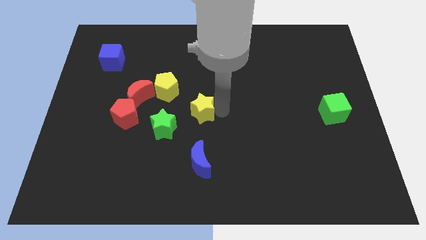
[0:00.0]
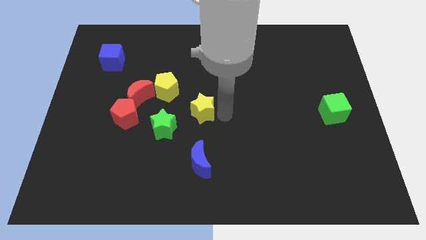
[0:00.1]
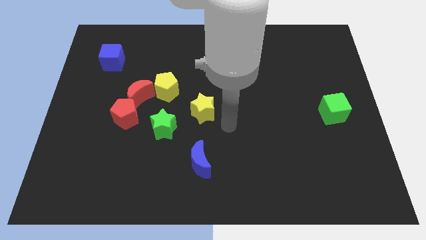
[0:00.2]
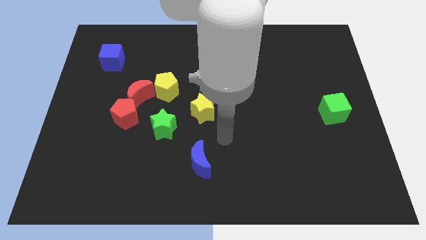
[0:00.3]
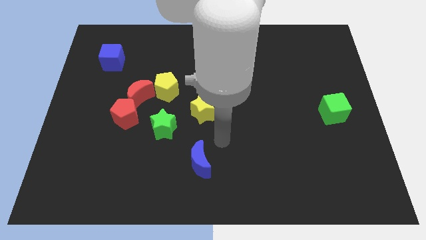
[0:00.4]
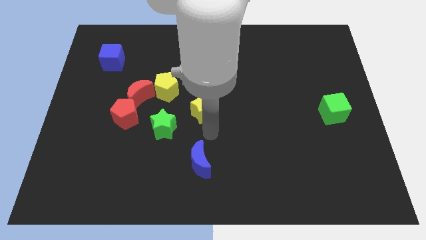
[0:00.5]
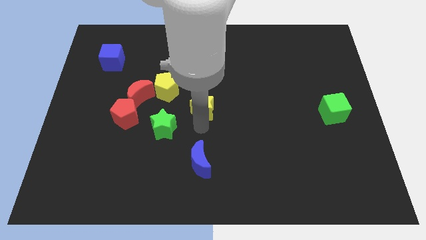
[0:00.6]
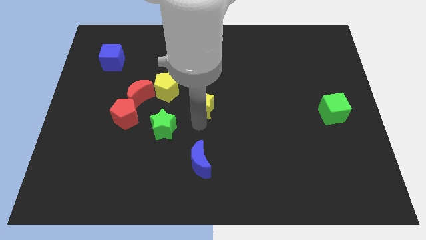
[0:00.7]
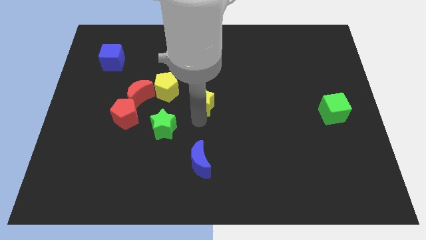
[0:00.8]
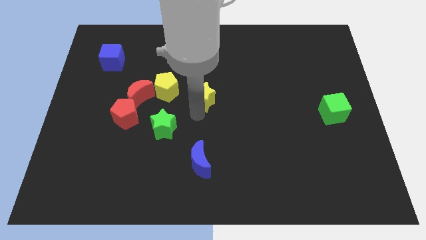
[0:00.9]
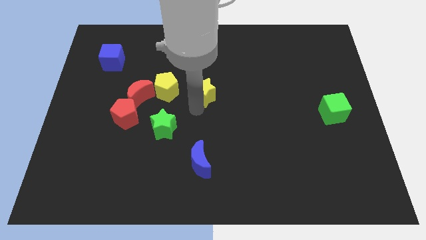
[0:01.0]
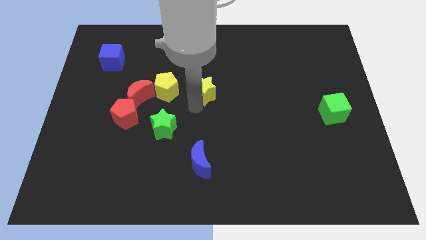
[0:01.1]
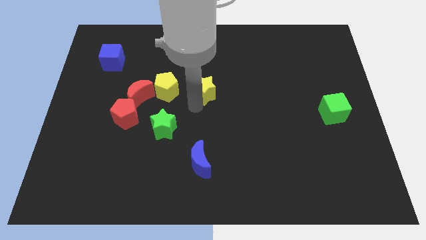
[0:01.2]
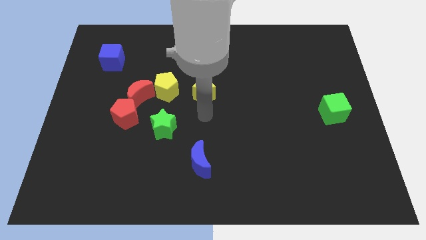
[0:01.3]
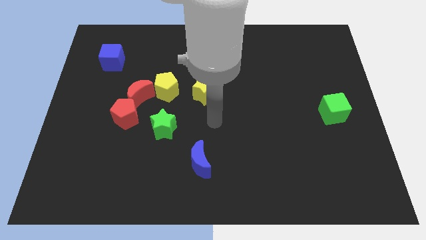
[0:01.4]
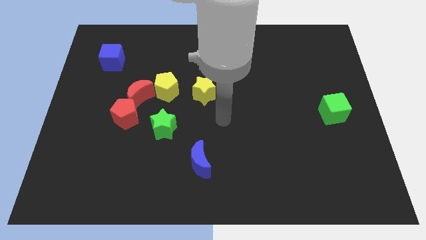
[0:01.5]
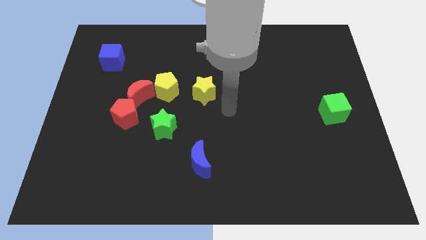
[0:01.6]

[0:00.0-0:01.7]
place the yellow star to the right side of yellow pentagon

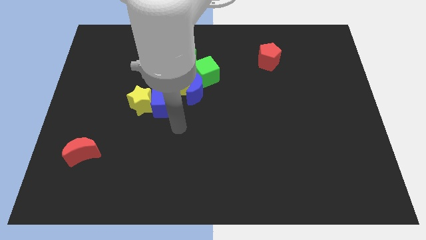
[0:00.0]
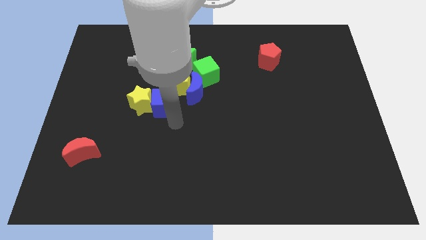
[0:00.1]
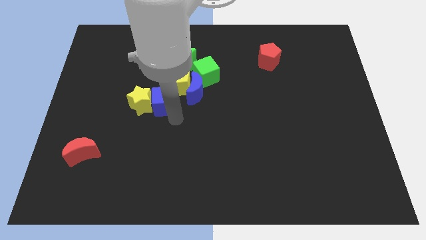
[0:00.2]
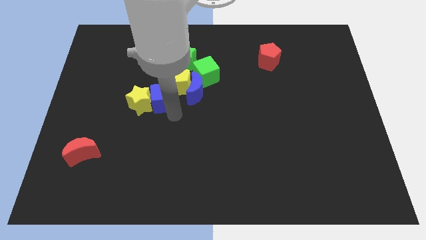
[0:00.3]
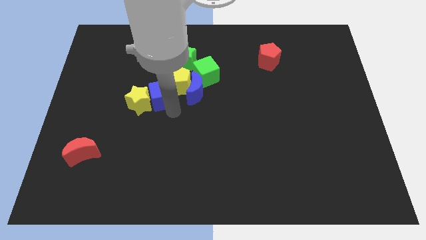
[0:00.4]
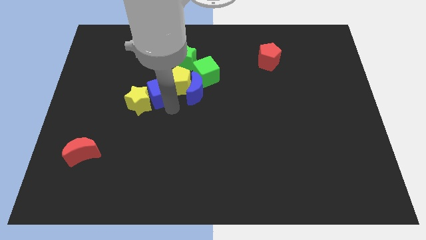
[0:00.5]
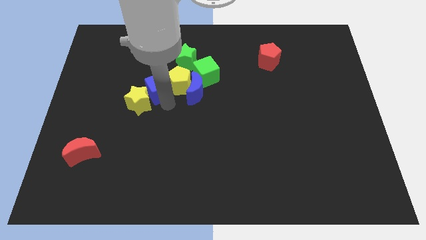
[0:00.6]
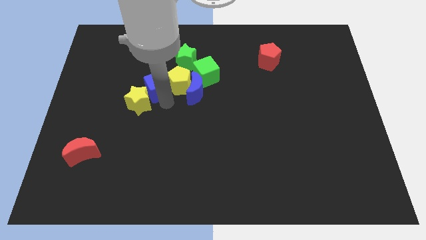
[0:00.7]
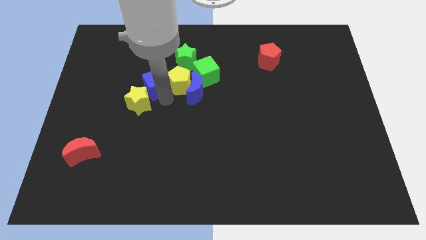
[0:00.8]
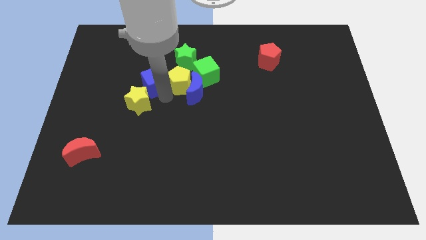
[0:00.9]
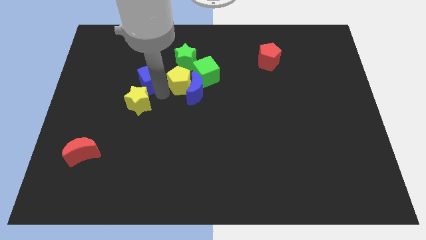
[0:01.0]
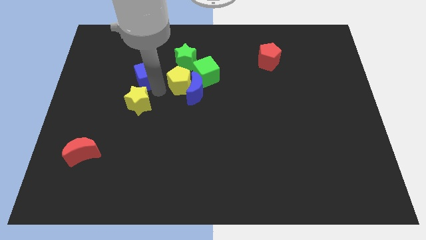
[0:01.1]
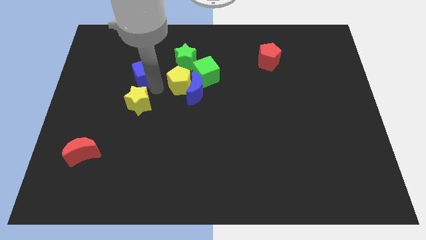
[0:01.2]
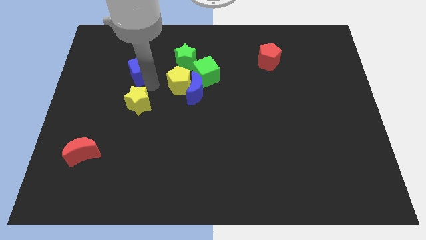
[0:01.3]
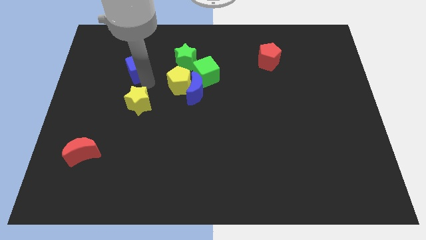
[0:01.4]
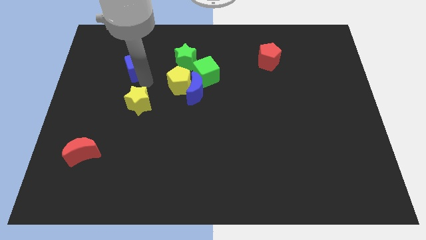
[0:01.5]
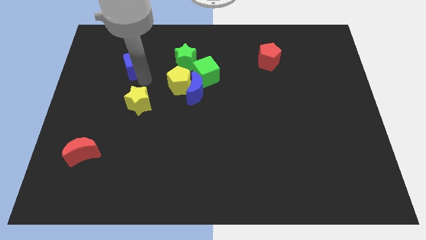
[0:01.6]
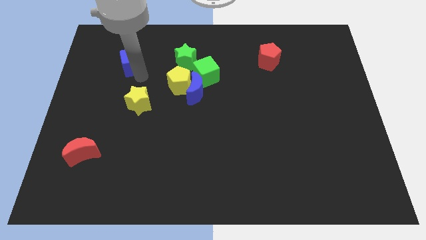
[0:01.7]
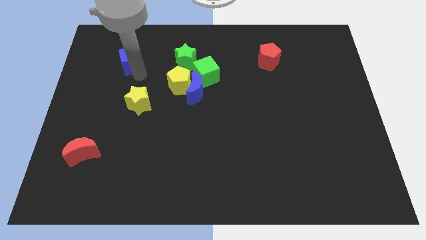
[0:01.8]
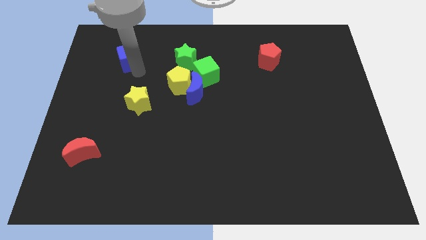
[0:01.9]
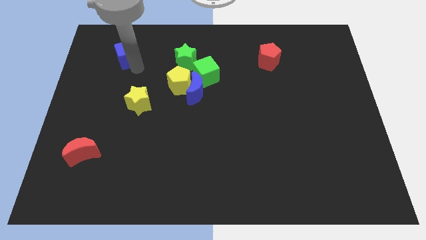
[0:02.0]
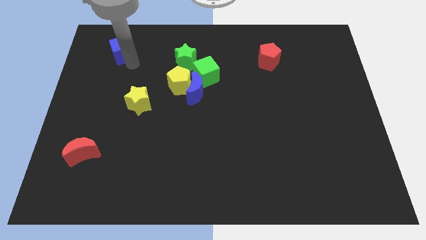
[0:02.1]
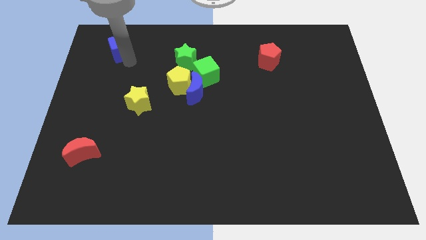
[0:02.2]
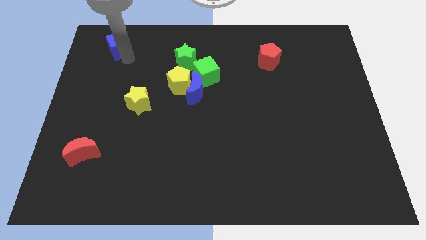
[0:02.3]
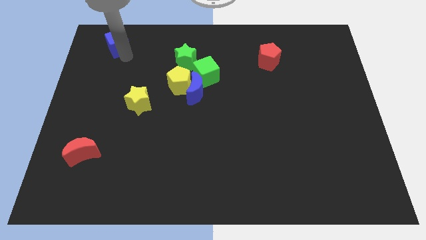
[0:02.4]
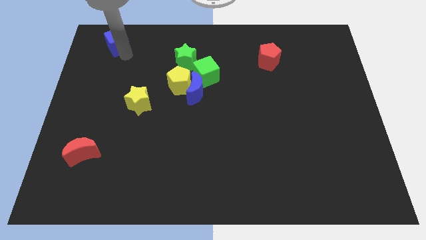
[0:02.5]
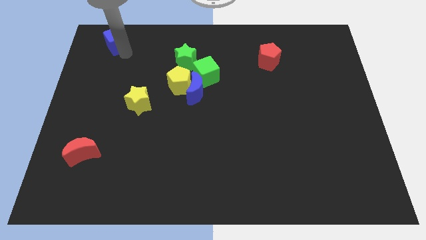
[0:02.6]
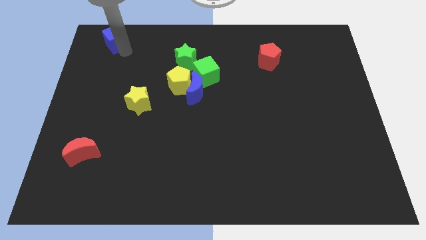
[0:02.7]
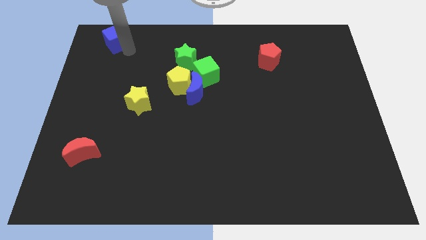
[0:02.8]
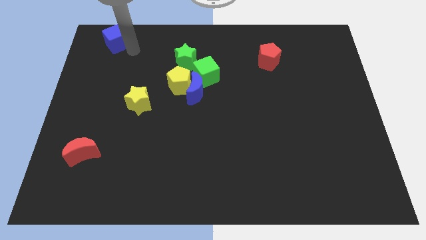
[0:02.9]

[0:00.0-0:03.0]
separate blue cube from yellow star

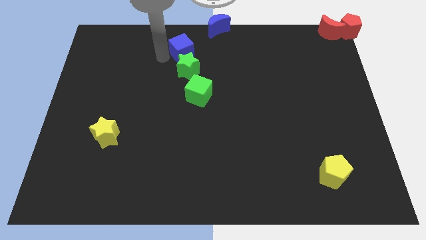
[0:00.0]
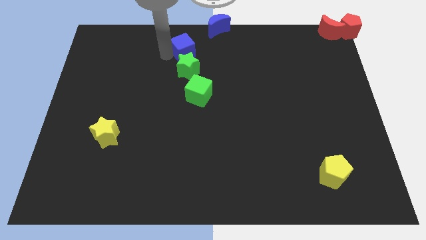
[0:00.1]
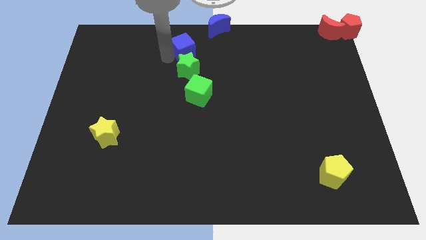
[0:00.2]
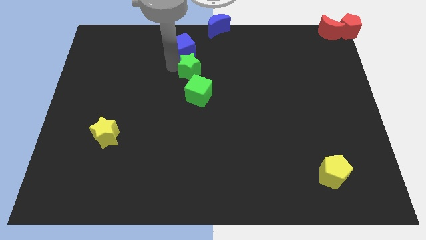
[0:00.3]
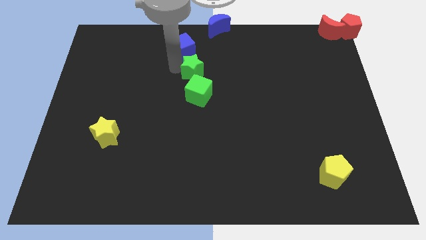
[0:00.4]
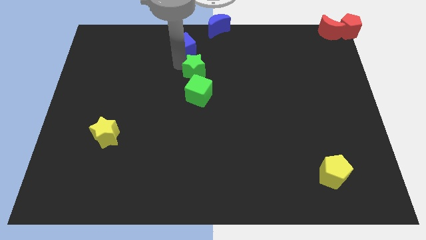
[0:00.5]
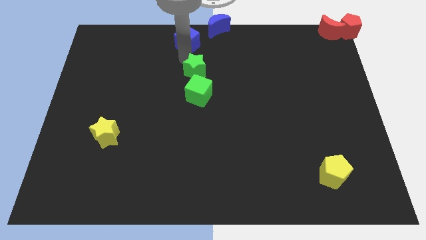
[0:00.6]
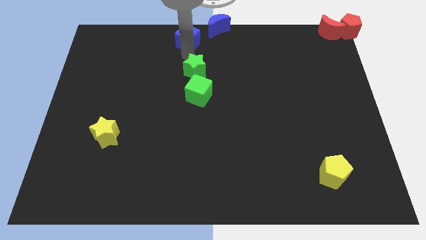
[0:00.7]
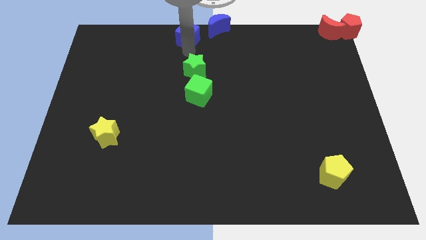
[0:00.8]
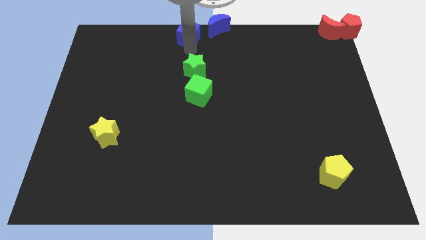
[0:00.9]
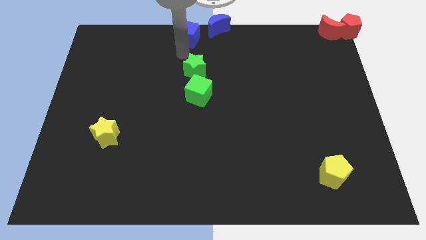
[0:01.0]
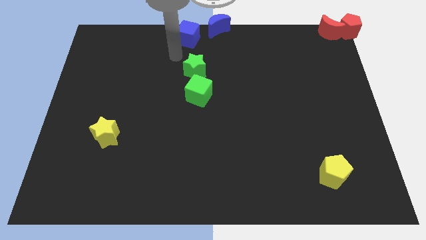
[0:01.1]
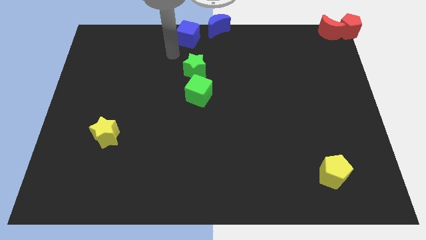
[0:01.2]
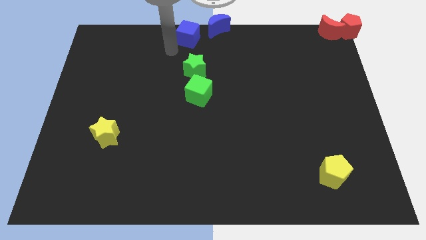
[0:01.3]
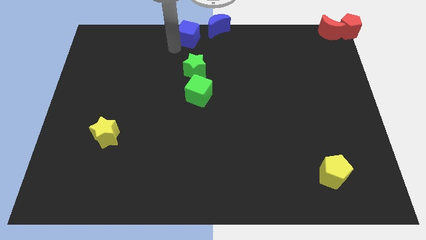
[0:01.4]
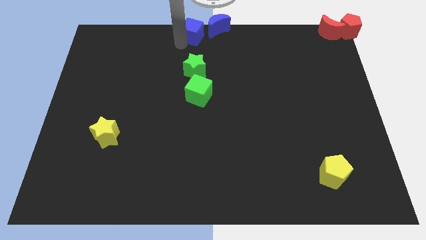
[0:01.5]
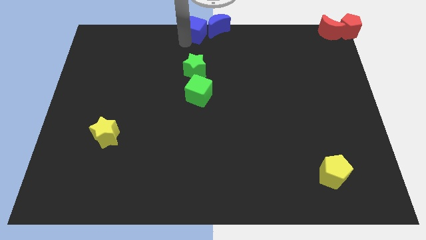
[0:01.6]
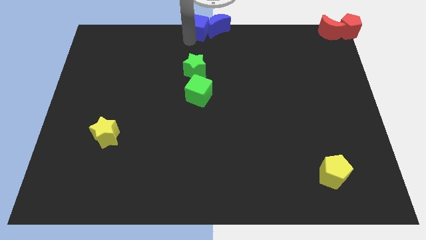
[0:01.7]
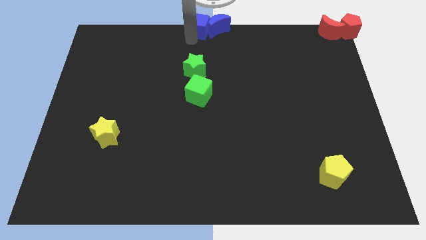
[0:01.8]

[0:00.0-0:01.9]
put the blue cube on the left side of the blue crescent

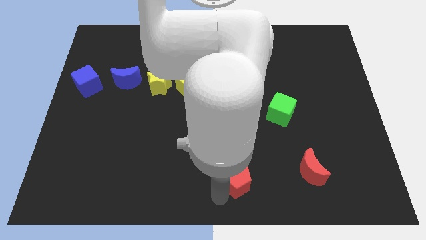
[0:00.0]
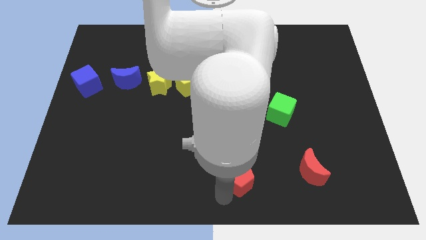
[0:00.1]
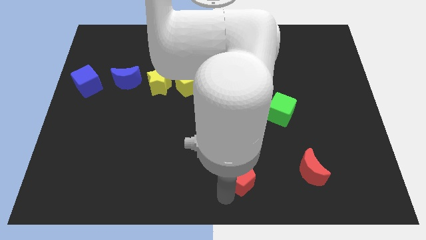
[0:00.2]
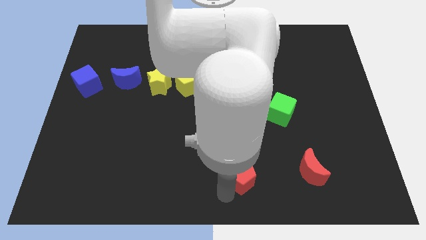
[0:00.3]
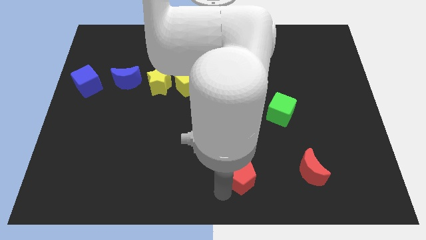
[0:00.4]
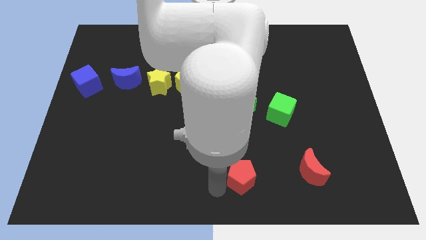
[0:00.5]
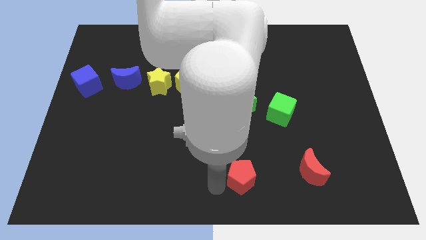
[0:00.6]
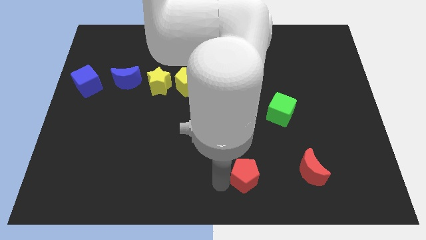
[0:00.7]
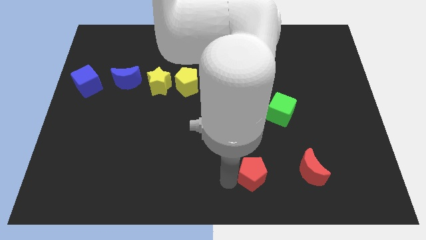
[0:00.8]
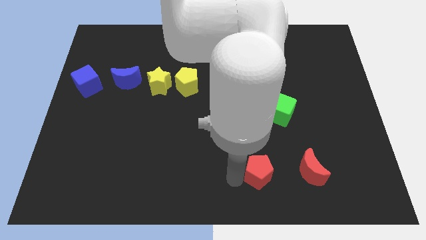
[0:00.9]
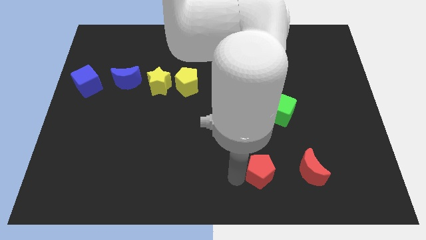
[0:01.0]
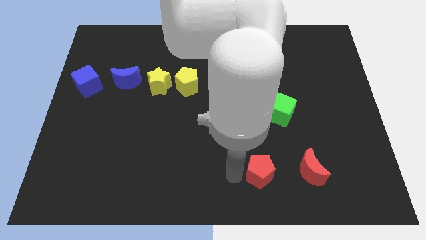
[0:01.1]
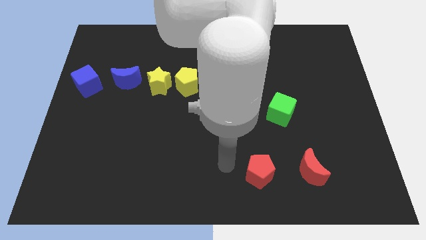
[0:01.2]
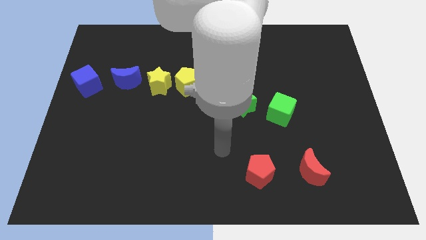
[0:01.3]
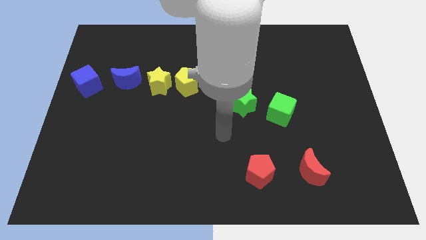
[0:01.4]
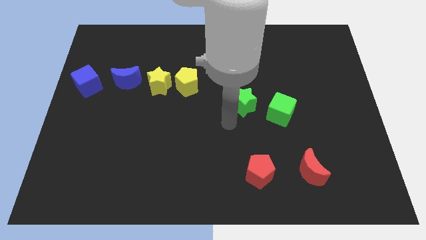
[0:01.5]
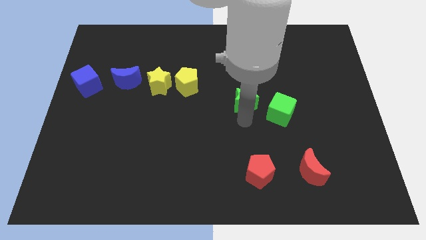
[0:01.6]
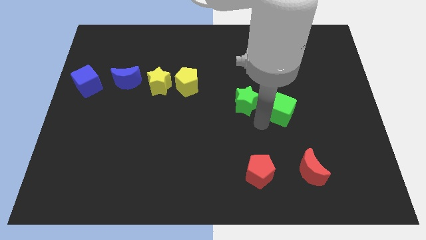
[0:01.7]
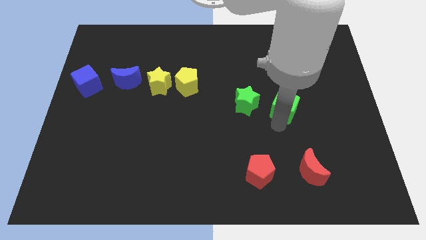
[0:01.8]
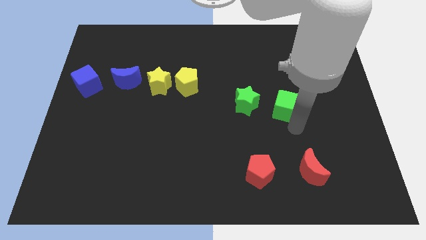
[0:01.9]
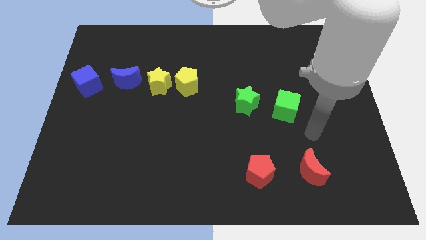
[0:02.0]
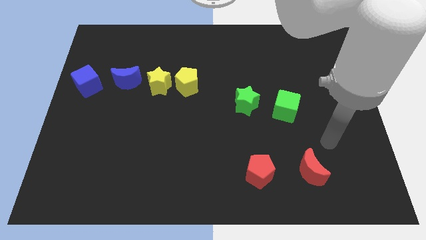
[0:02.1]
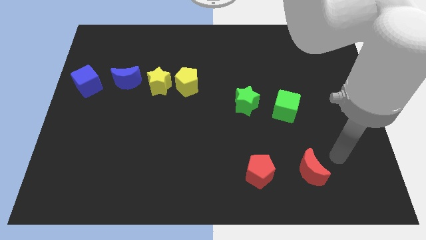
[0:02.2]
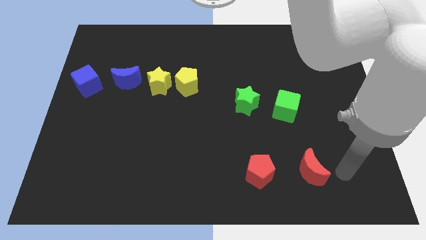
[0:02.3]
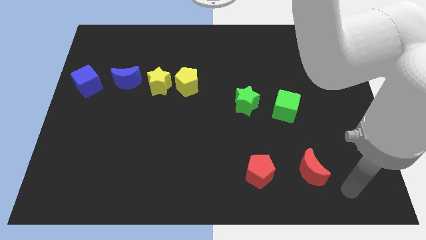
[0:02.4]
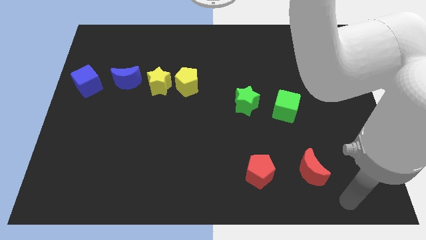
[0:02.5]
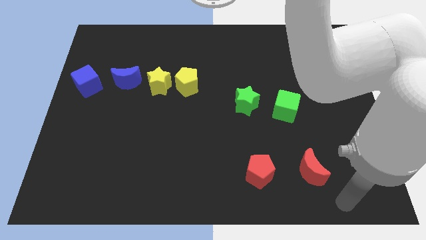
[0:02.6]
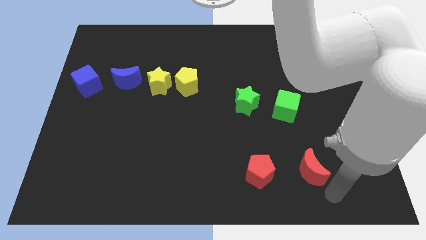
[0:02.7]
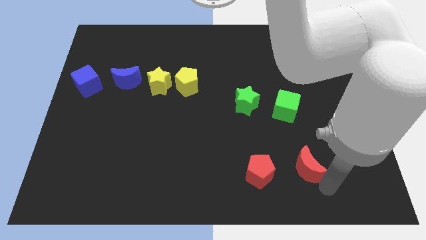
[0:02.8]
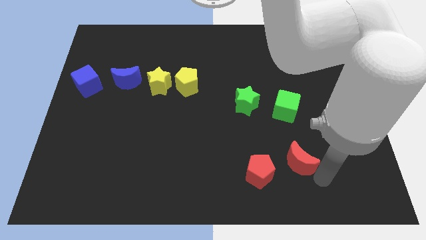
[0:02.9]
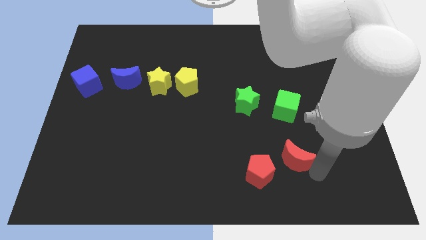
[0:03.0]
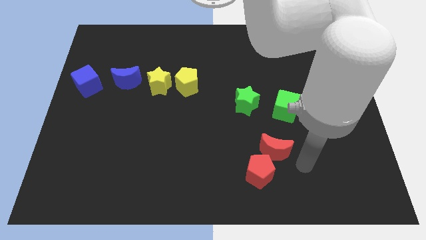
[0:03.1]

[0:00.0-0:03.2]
place the red moon down to the green cube
